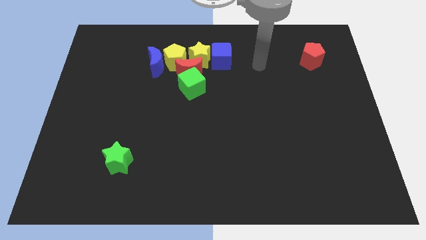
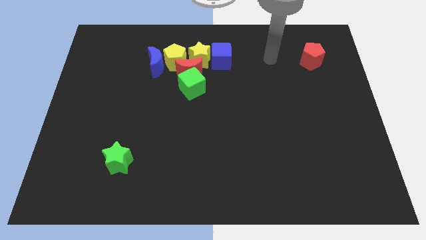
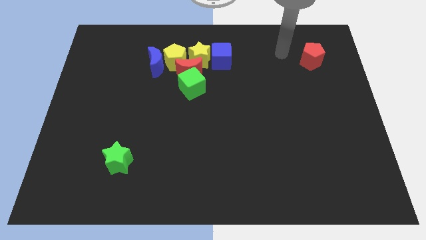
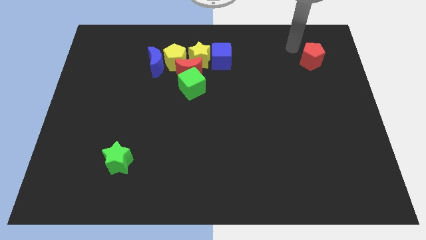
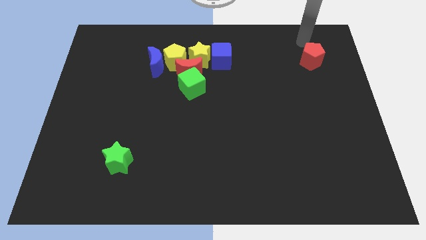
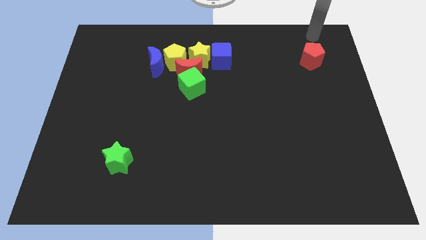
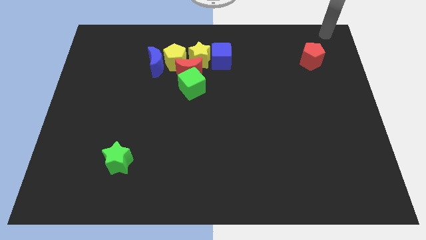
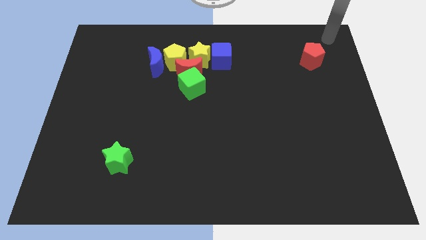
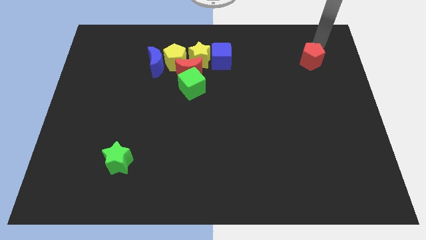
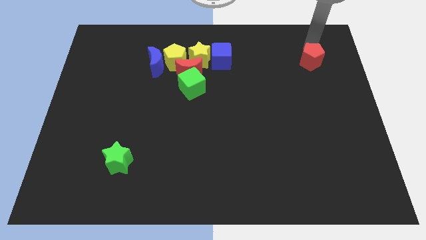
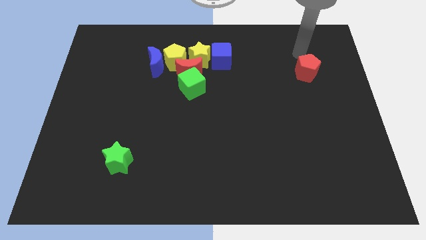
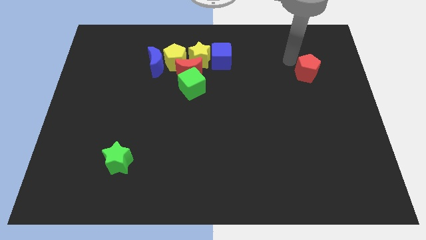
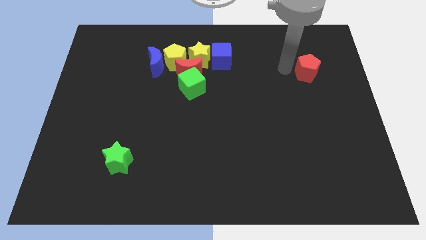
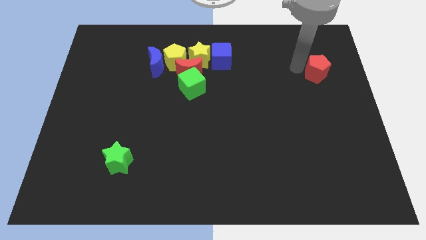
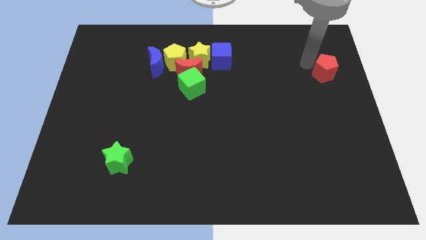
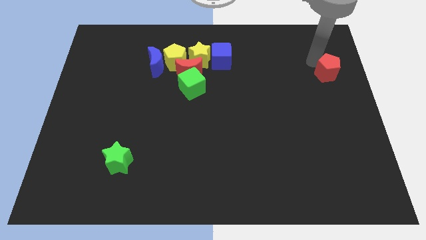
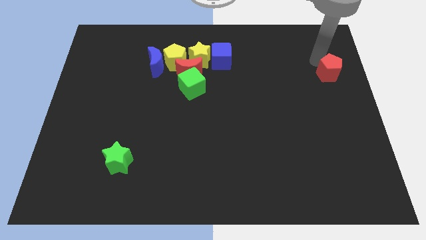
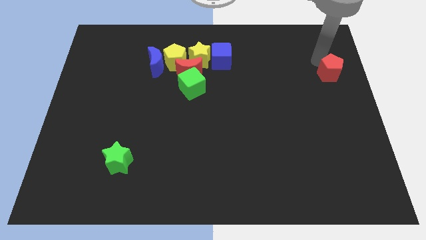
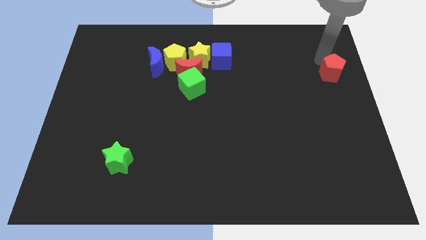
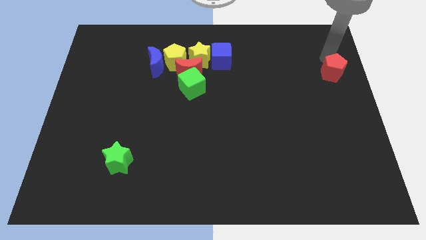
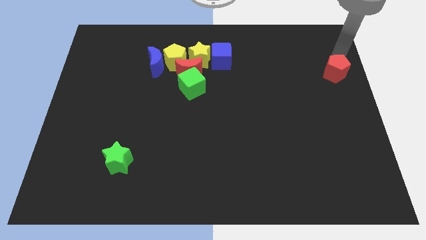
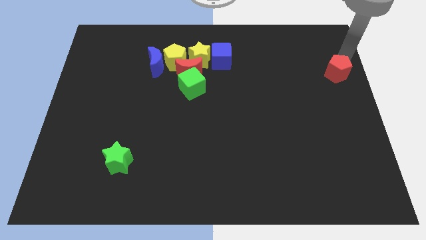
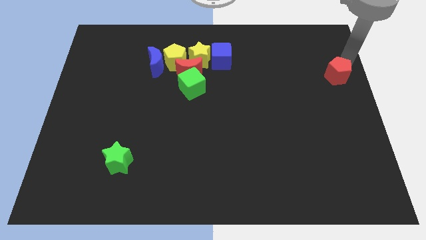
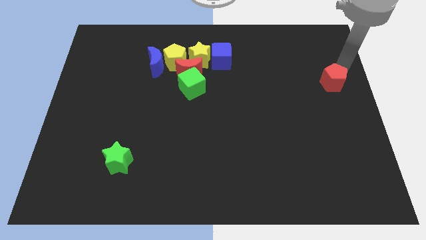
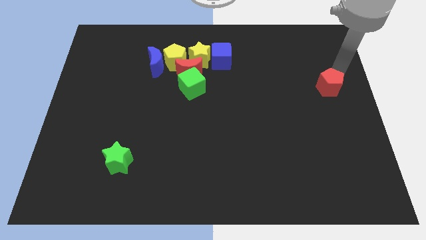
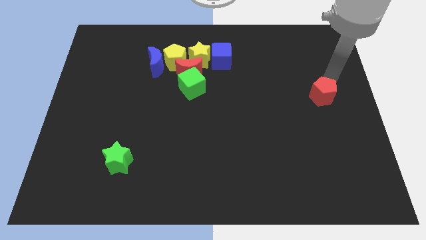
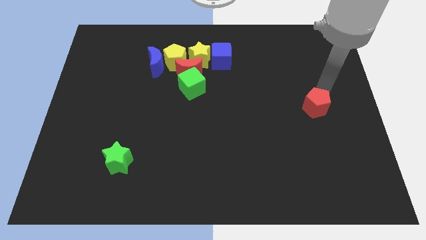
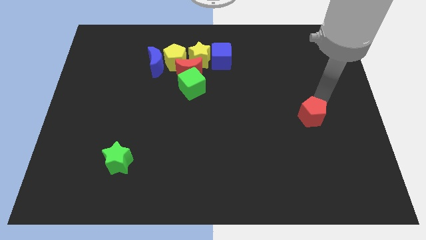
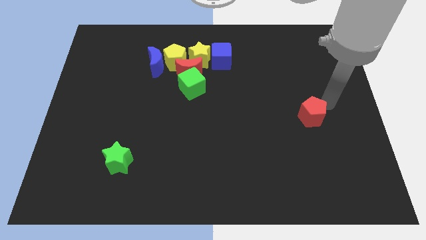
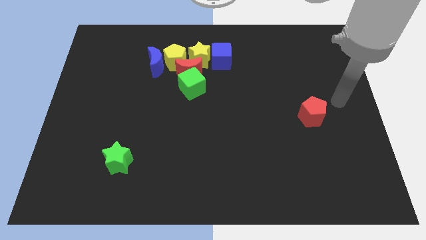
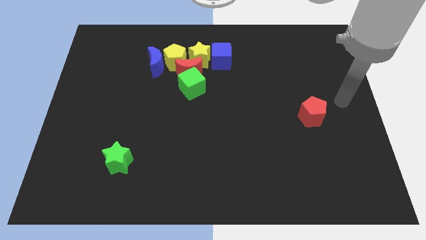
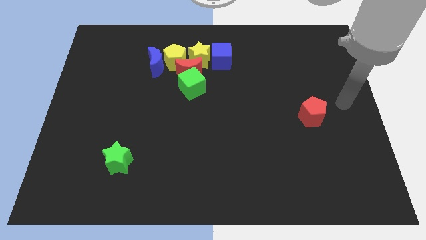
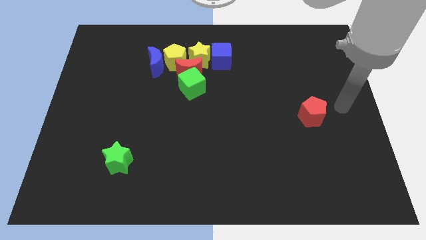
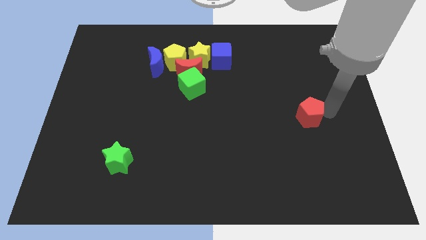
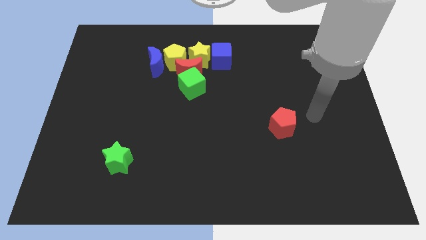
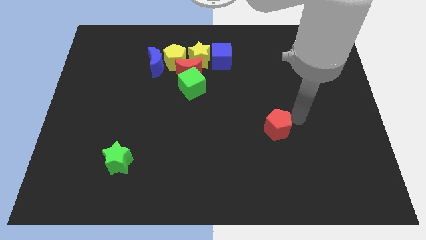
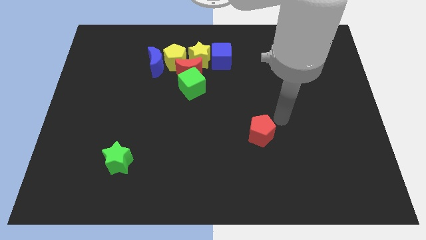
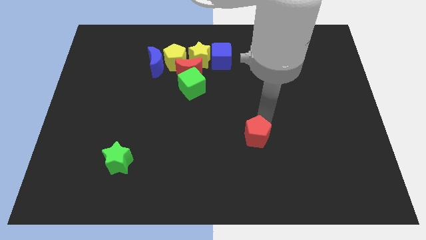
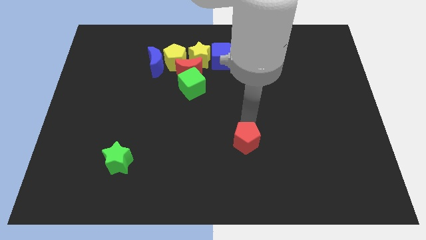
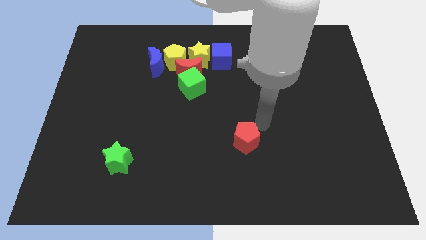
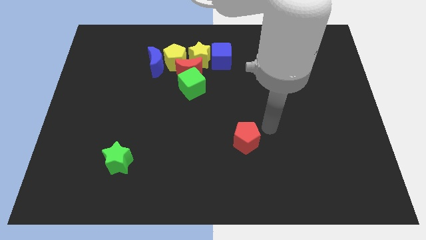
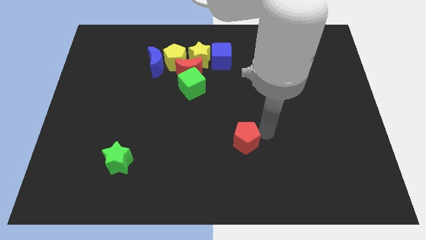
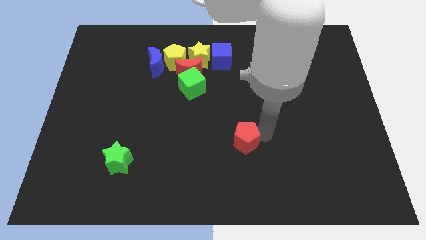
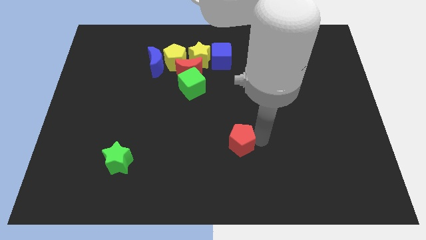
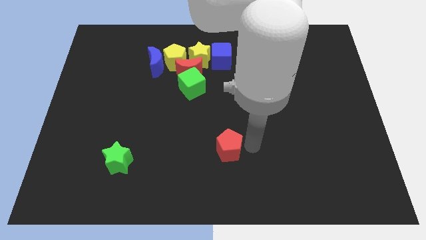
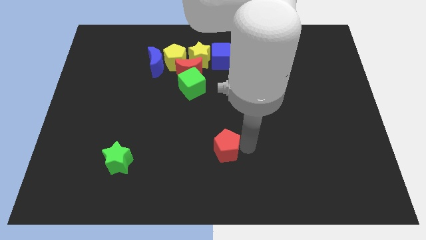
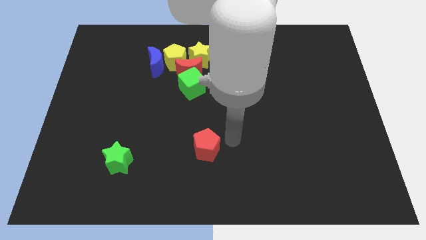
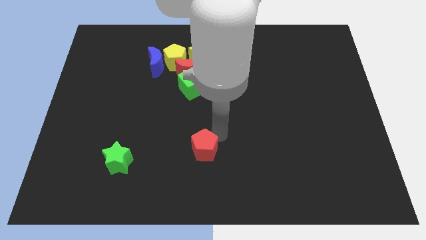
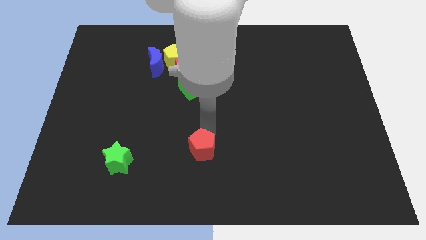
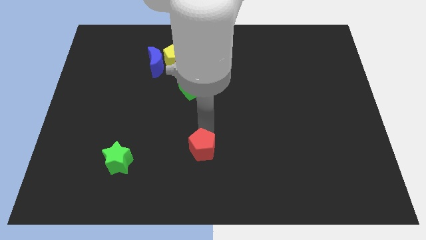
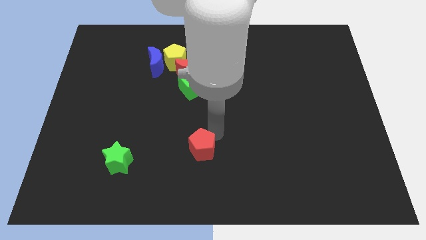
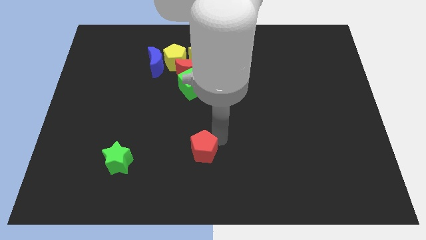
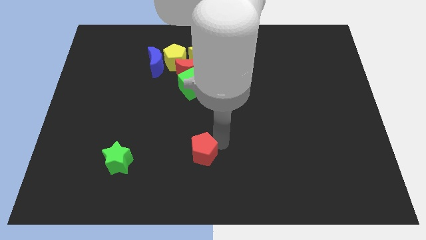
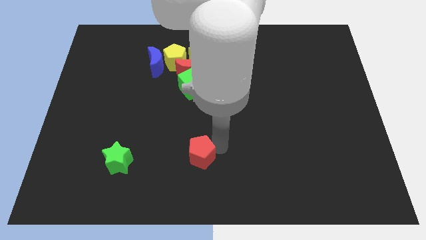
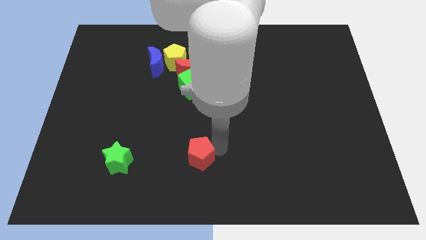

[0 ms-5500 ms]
place the red pentagon below the green cube

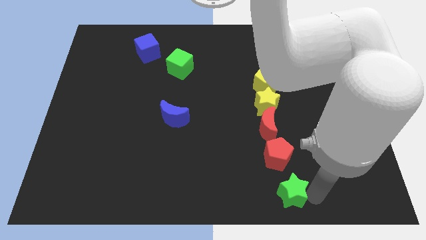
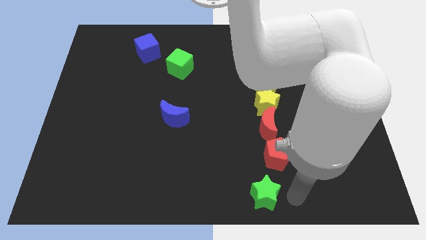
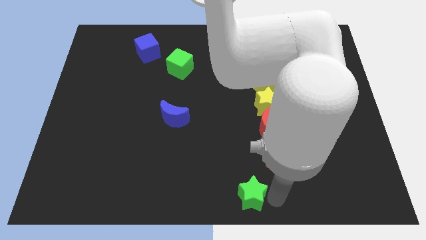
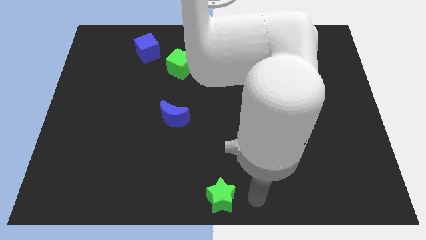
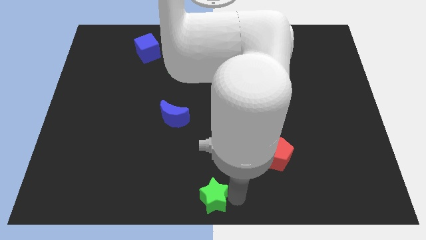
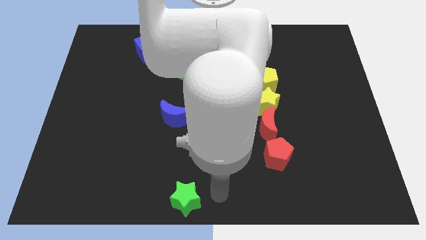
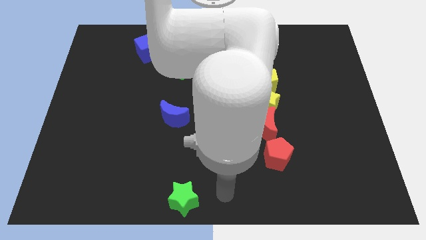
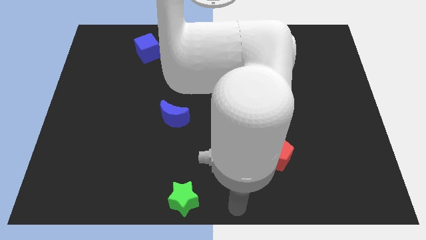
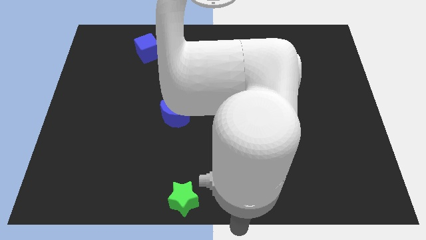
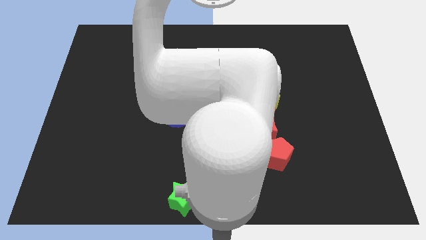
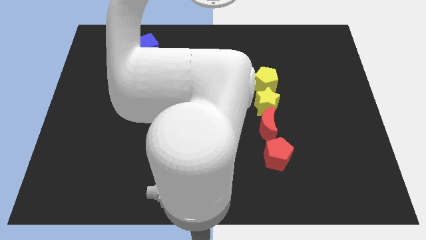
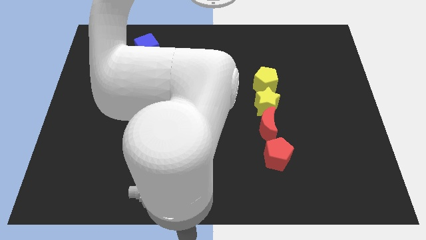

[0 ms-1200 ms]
move the green star to the bottom center

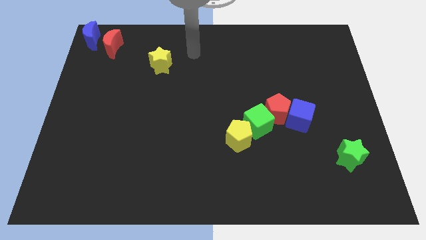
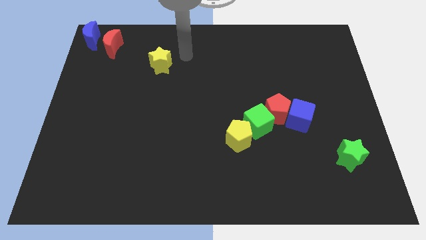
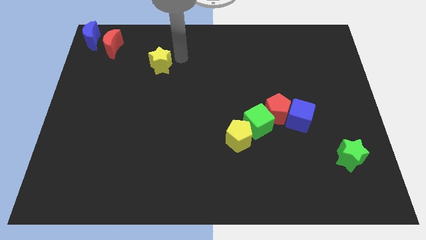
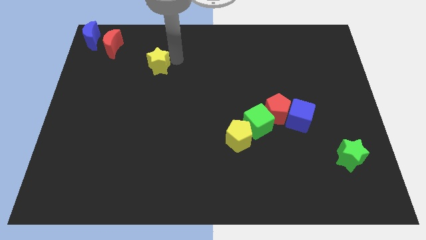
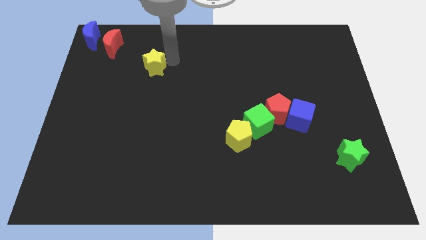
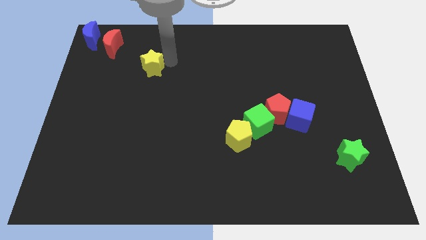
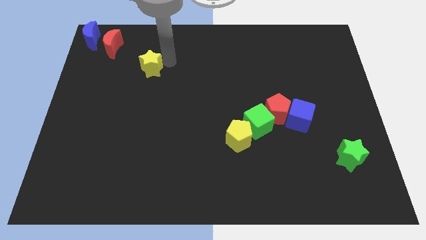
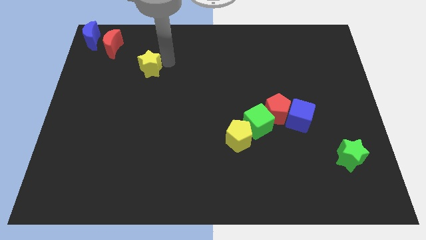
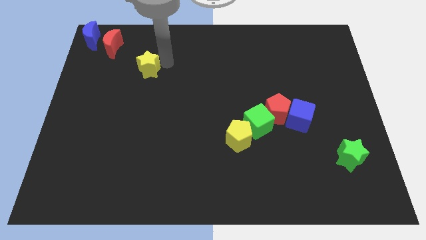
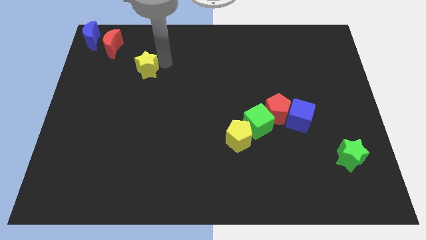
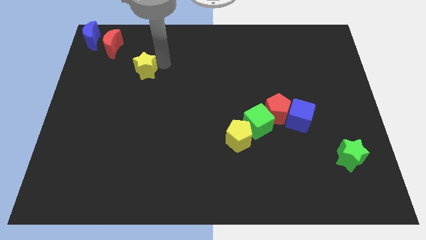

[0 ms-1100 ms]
place the yellow star at the bottom right of the red crescent

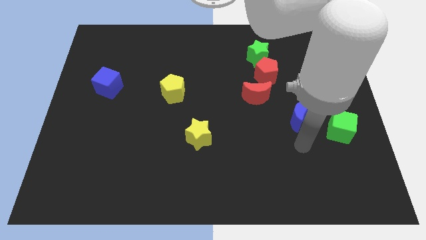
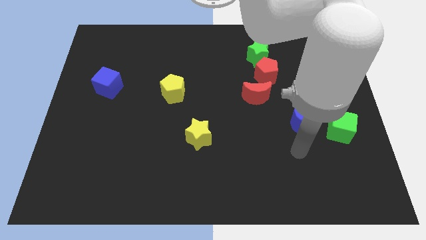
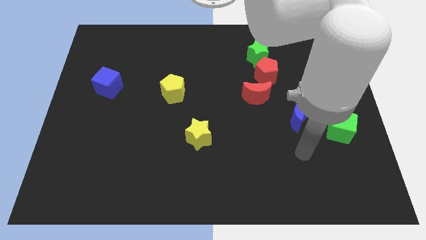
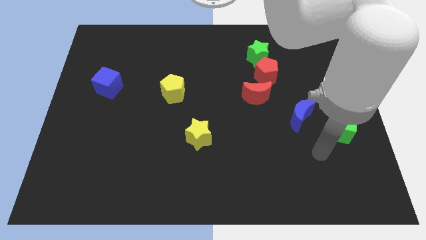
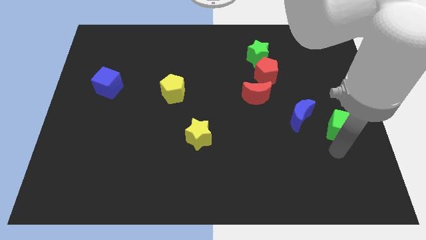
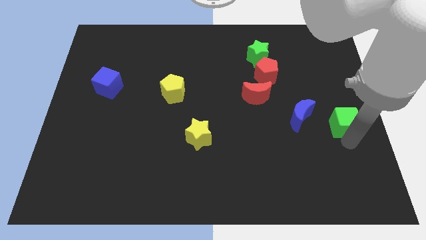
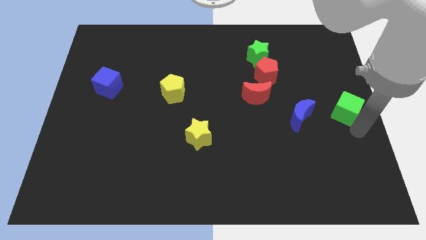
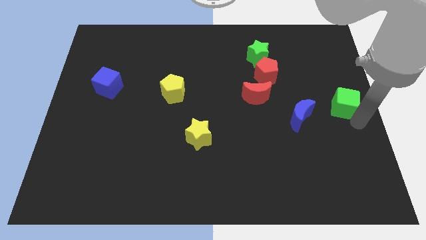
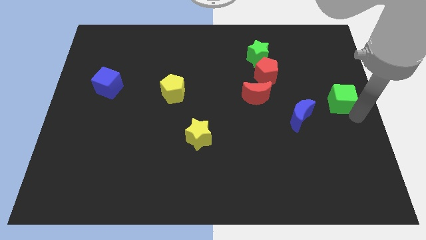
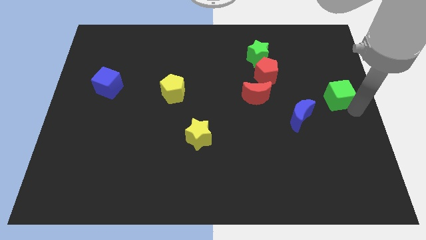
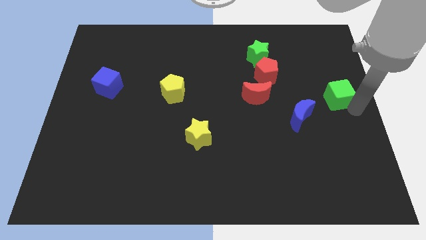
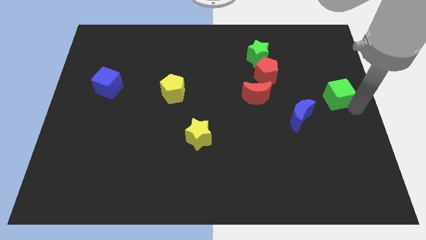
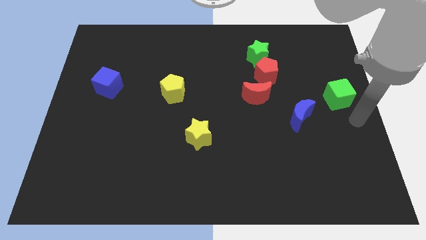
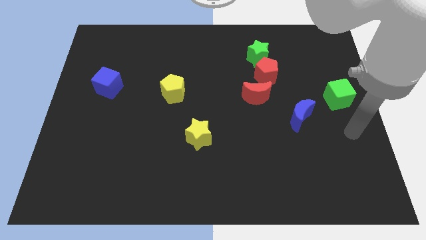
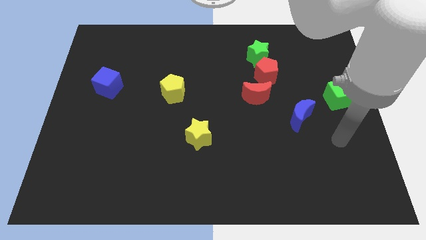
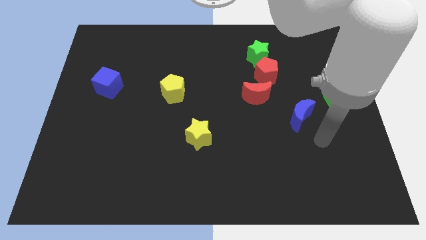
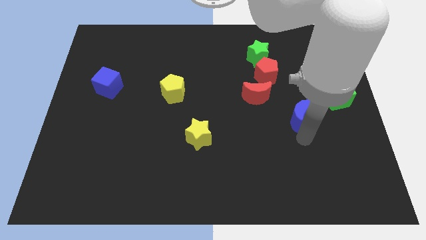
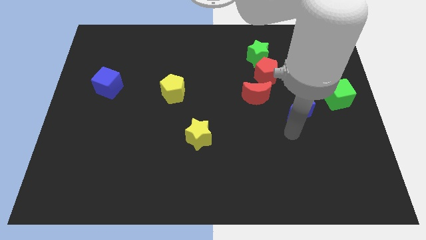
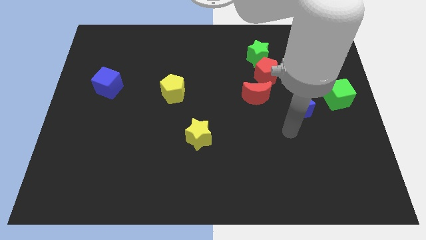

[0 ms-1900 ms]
move the green cube towards the center right
